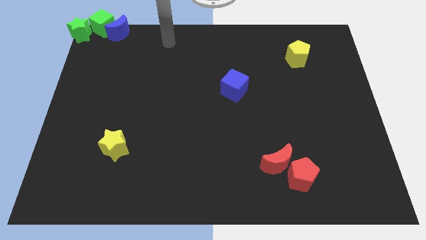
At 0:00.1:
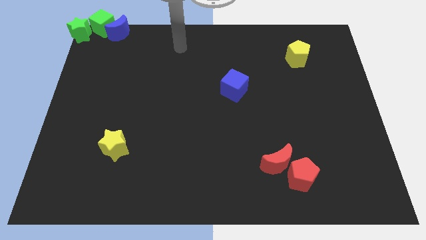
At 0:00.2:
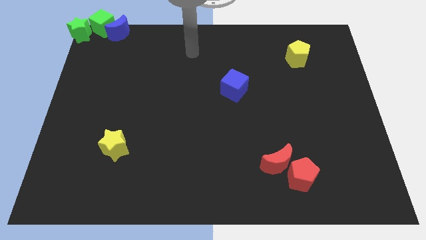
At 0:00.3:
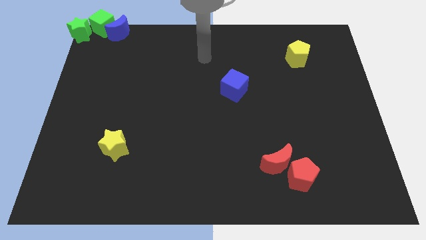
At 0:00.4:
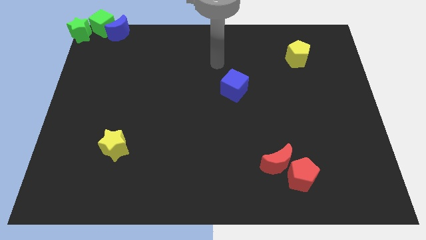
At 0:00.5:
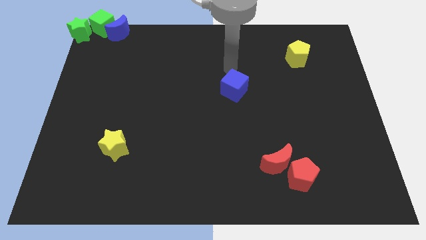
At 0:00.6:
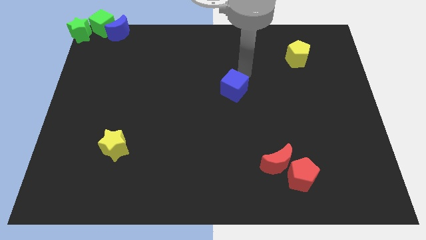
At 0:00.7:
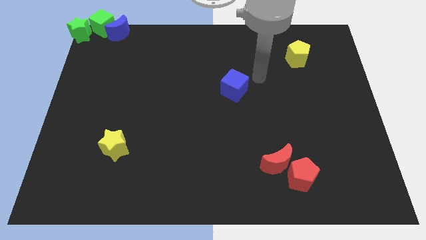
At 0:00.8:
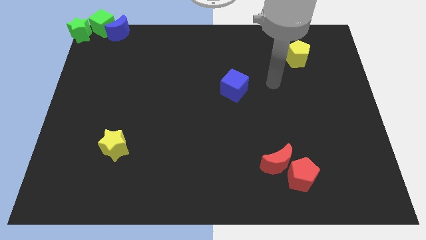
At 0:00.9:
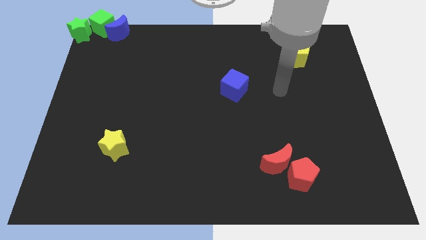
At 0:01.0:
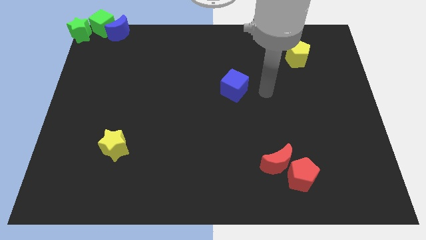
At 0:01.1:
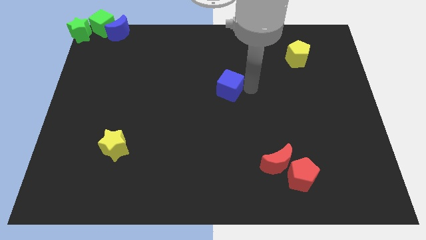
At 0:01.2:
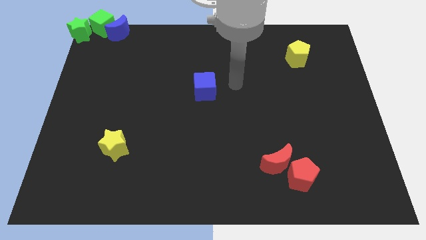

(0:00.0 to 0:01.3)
push the blue cube to the center of the board

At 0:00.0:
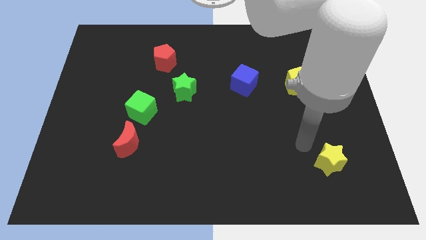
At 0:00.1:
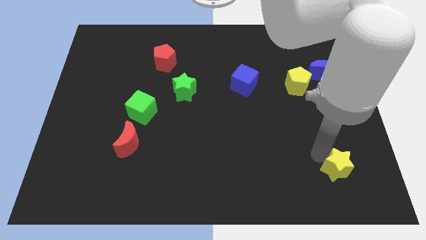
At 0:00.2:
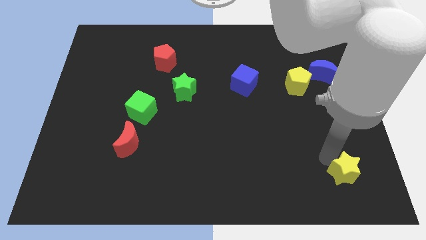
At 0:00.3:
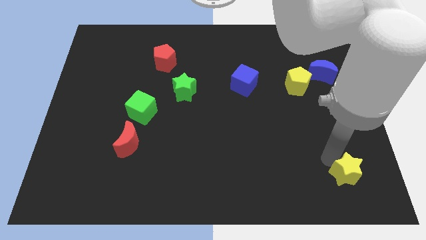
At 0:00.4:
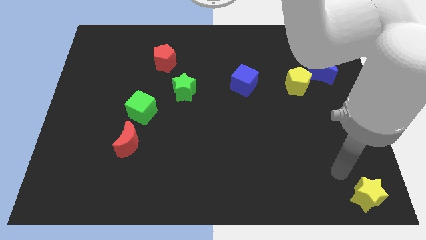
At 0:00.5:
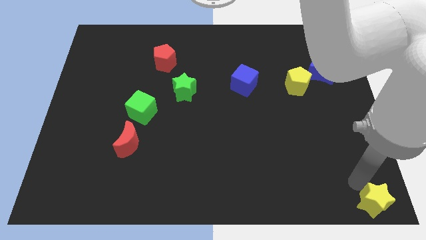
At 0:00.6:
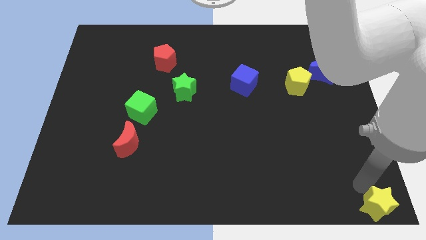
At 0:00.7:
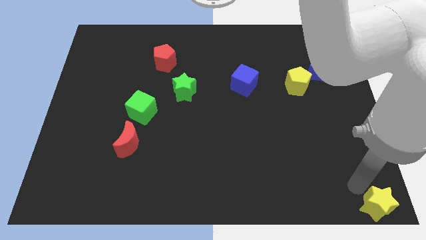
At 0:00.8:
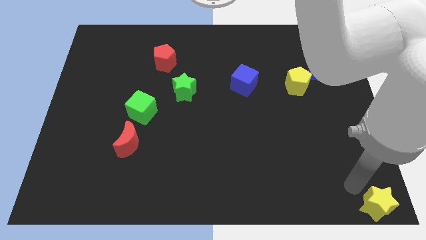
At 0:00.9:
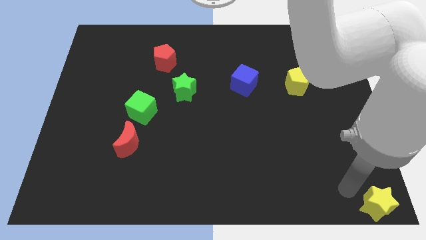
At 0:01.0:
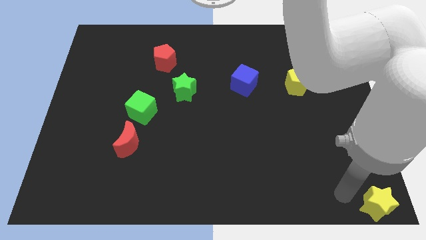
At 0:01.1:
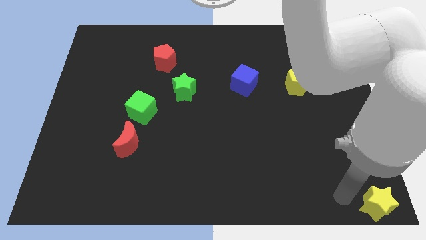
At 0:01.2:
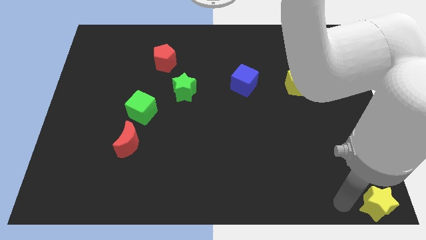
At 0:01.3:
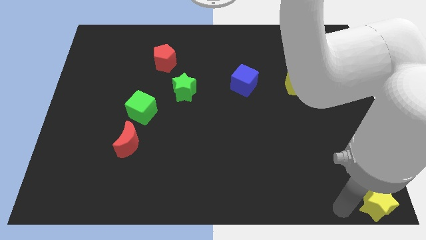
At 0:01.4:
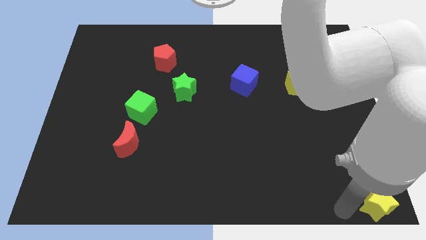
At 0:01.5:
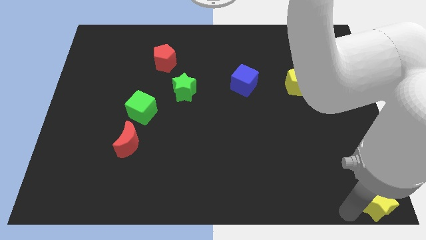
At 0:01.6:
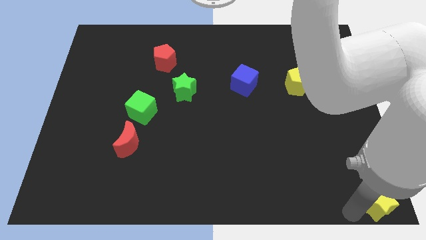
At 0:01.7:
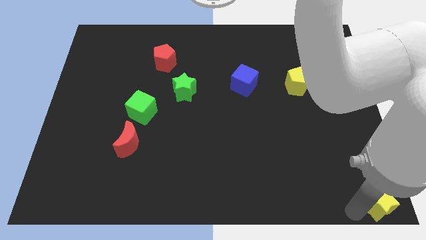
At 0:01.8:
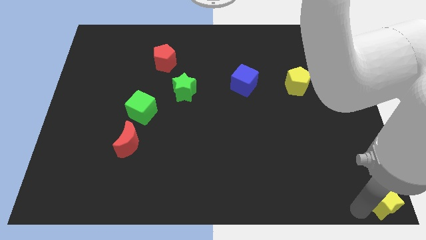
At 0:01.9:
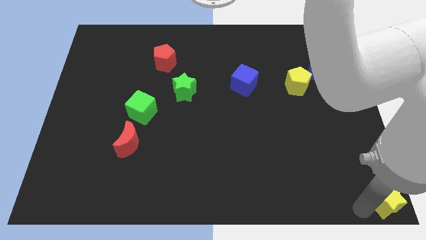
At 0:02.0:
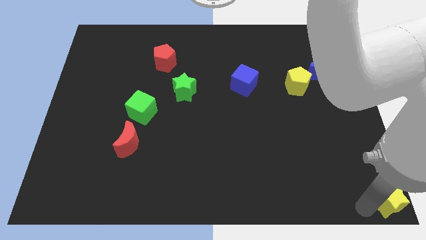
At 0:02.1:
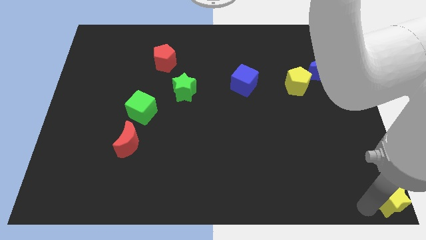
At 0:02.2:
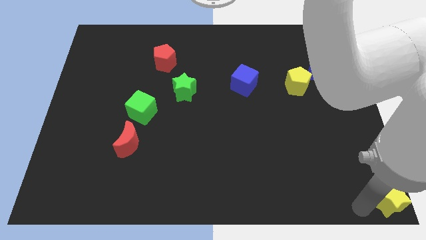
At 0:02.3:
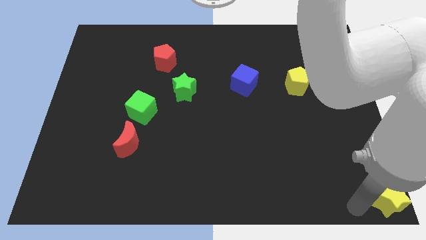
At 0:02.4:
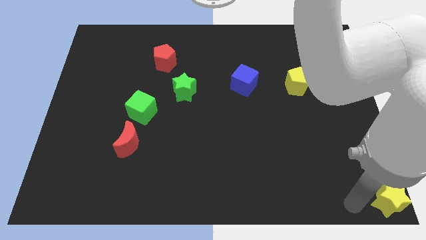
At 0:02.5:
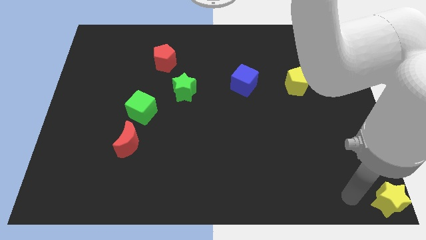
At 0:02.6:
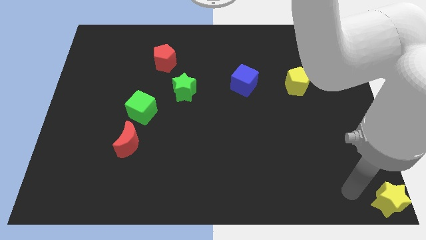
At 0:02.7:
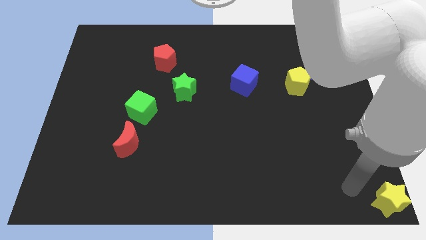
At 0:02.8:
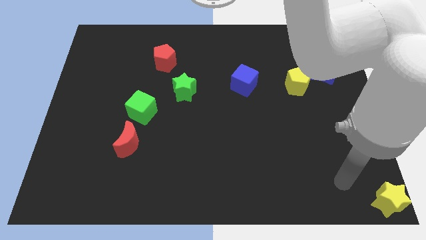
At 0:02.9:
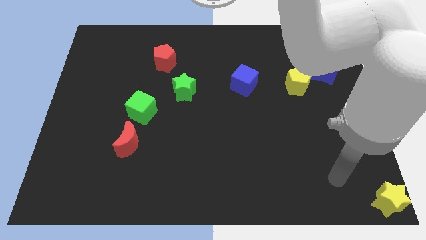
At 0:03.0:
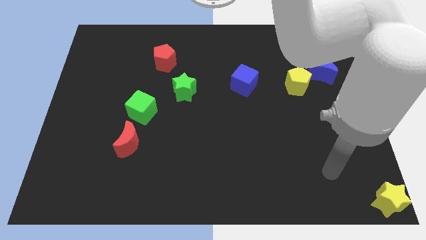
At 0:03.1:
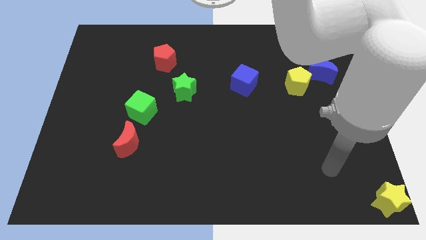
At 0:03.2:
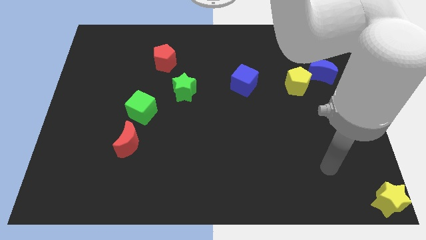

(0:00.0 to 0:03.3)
slide the yellow star to the bottom right of the board

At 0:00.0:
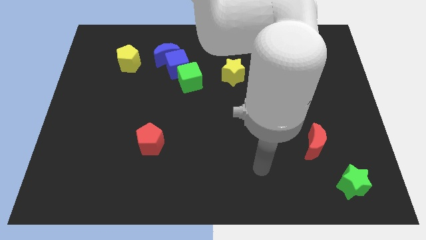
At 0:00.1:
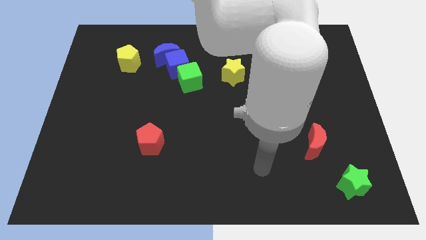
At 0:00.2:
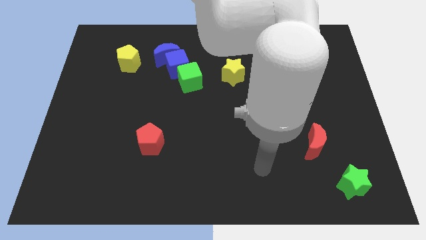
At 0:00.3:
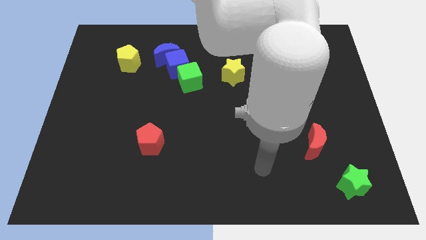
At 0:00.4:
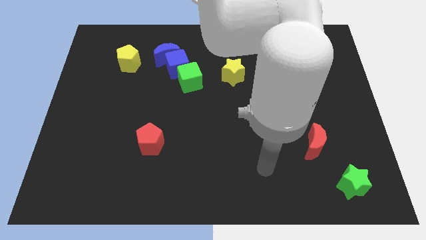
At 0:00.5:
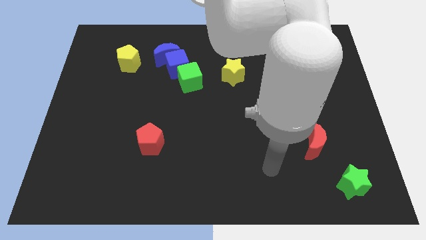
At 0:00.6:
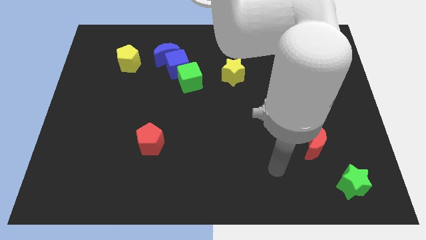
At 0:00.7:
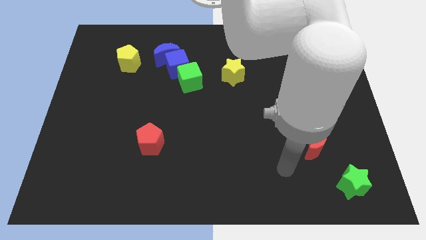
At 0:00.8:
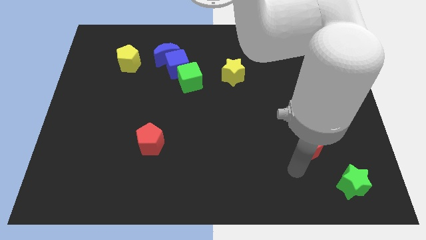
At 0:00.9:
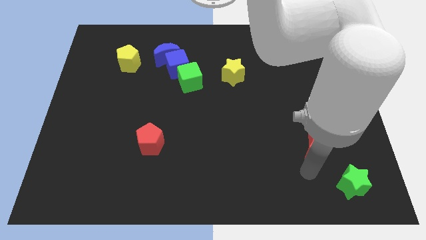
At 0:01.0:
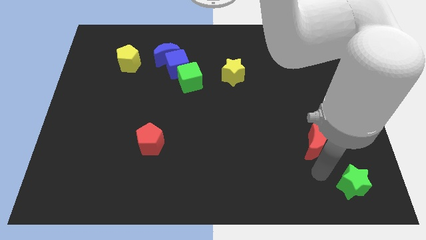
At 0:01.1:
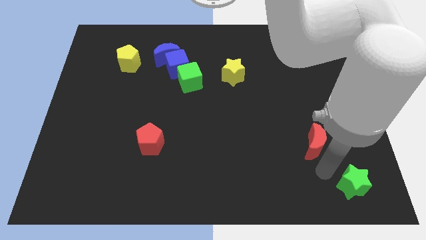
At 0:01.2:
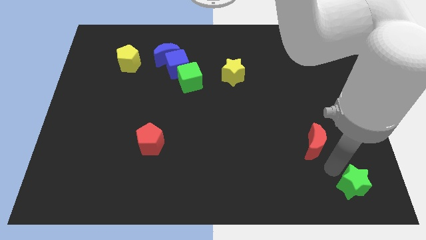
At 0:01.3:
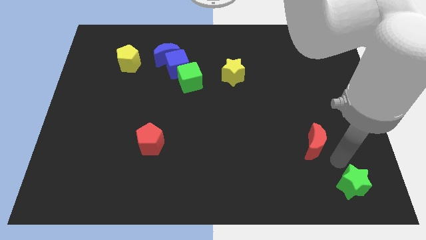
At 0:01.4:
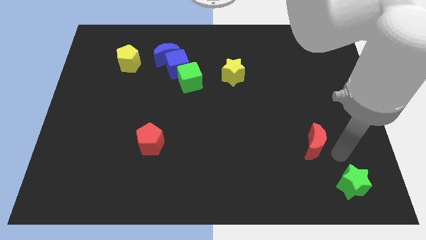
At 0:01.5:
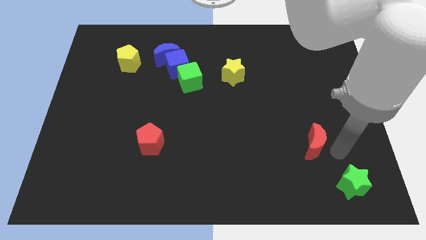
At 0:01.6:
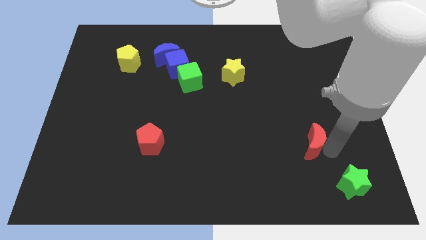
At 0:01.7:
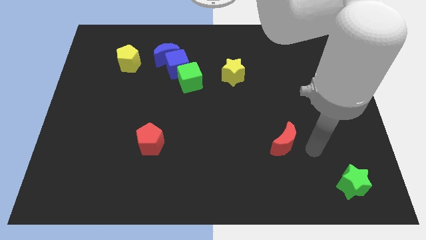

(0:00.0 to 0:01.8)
place the arm right to the red moon

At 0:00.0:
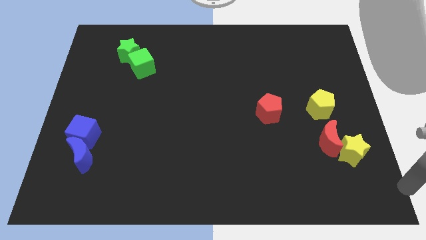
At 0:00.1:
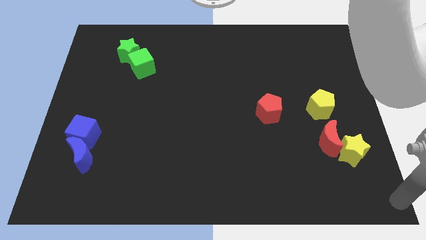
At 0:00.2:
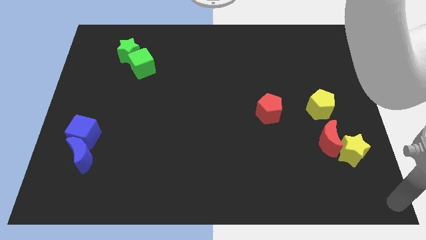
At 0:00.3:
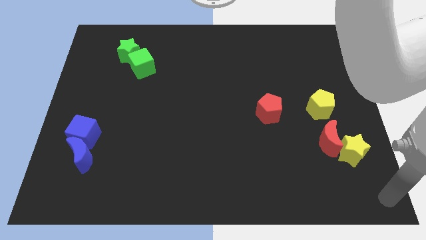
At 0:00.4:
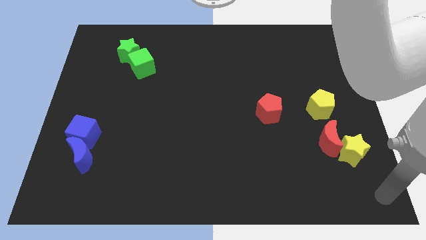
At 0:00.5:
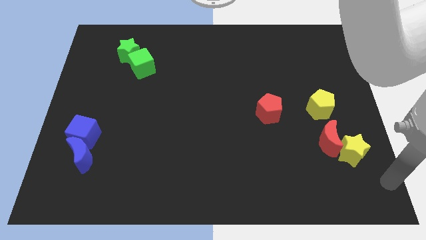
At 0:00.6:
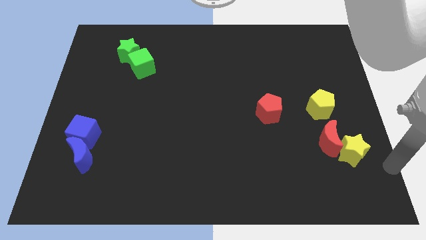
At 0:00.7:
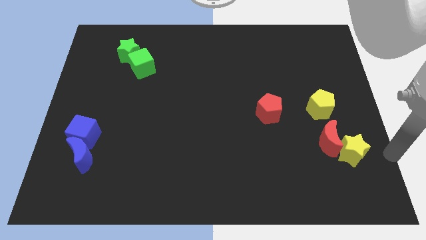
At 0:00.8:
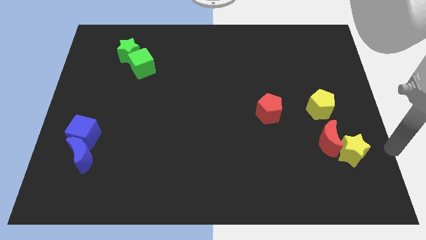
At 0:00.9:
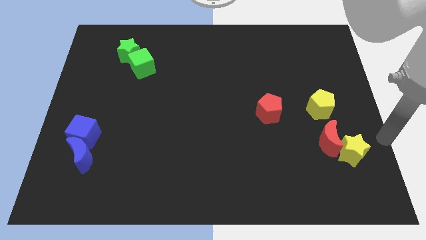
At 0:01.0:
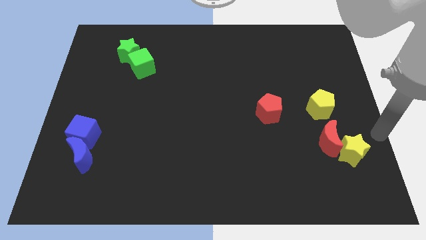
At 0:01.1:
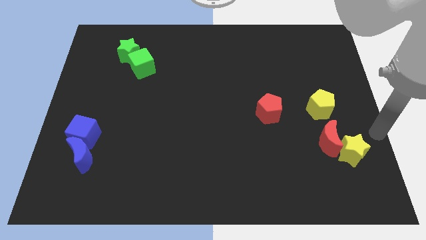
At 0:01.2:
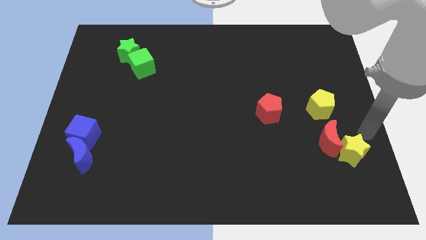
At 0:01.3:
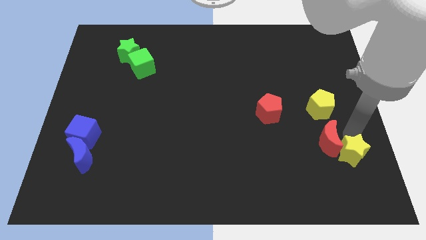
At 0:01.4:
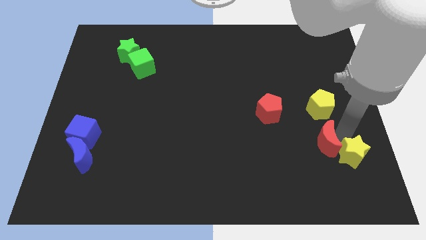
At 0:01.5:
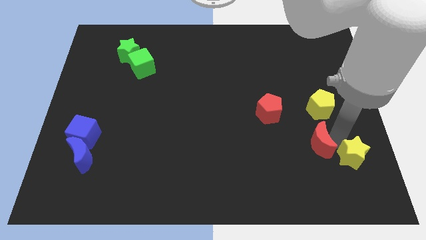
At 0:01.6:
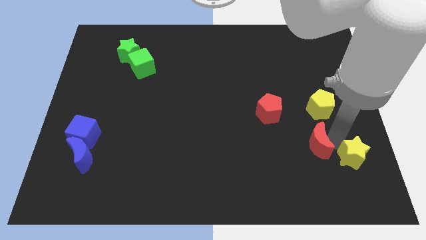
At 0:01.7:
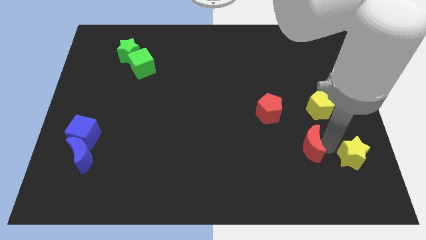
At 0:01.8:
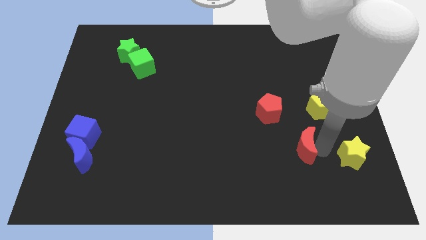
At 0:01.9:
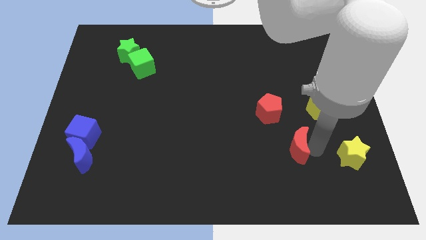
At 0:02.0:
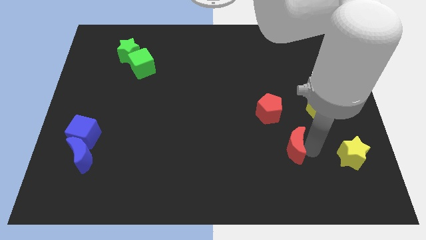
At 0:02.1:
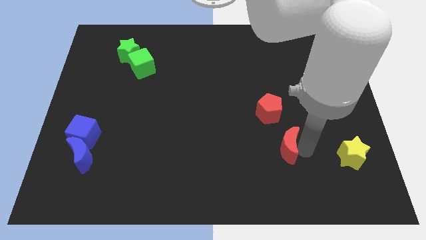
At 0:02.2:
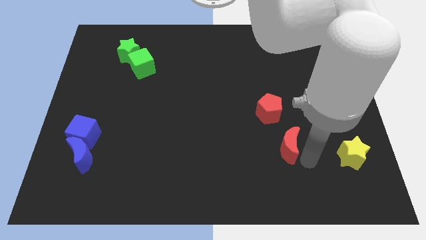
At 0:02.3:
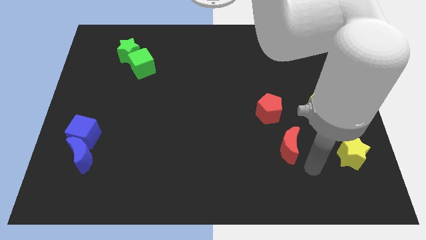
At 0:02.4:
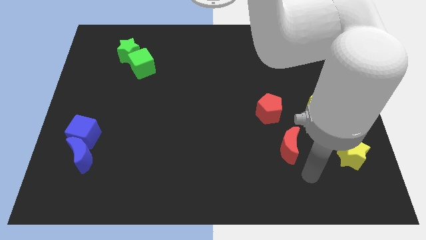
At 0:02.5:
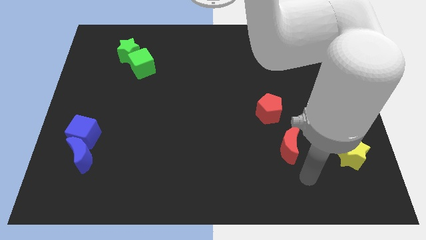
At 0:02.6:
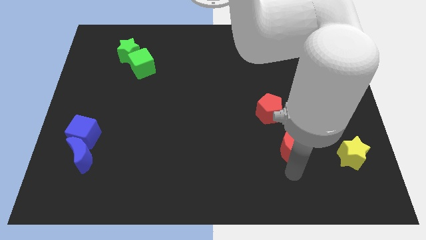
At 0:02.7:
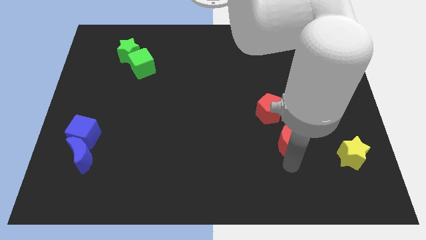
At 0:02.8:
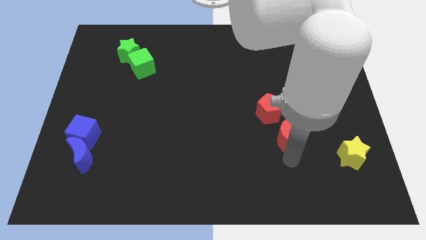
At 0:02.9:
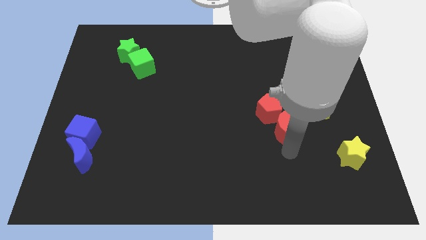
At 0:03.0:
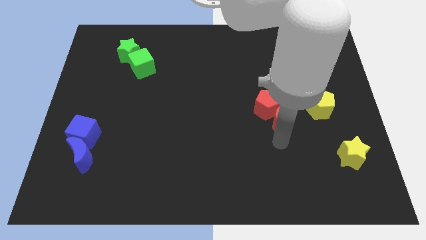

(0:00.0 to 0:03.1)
move the red crescent away from the yellow star
